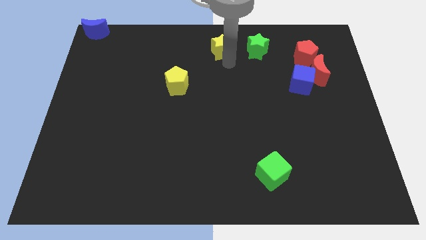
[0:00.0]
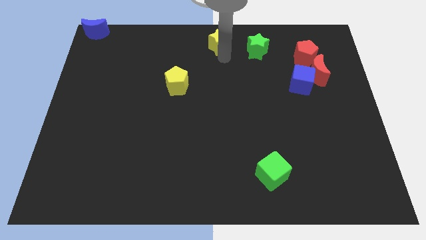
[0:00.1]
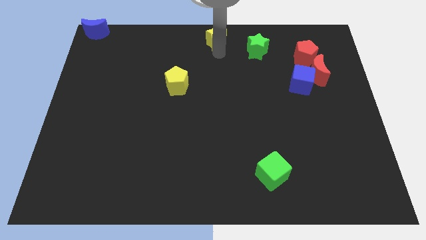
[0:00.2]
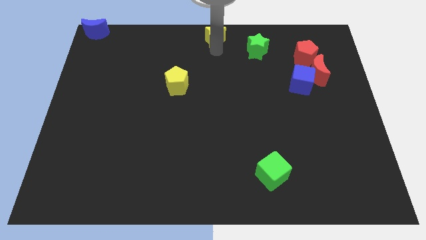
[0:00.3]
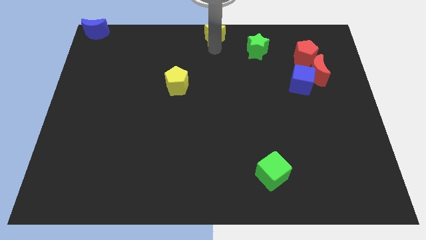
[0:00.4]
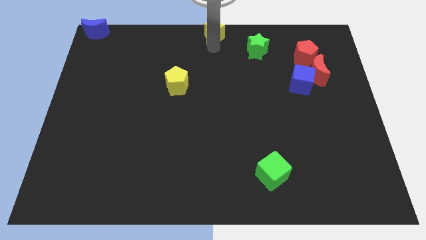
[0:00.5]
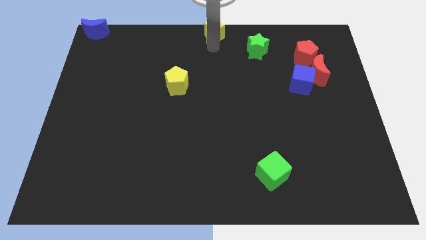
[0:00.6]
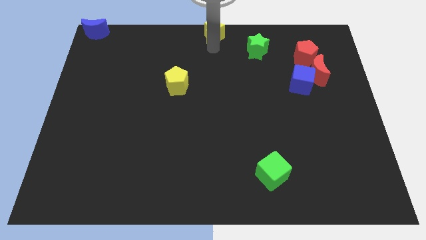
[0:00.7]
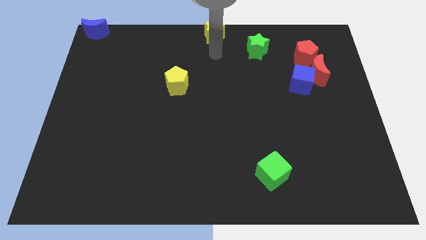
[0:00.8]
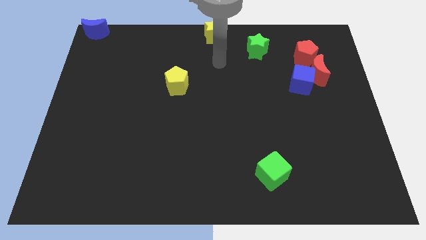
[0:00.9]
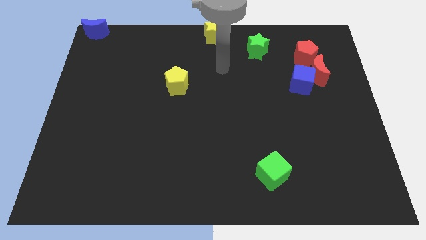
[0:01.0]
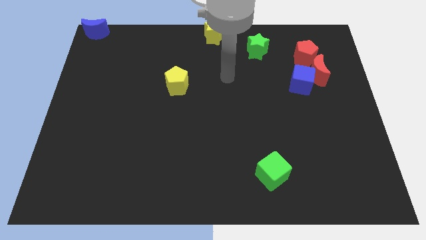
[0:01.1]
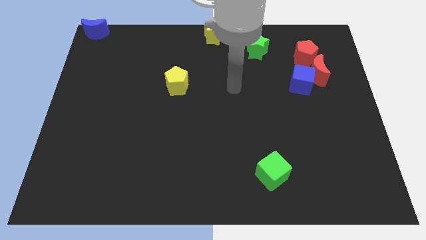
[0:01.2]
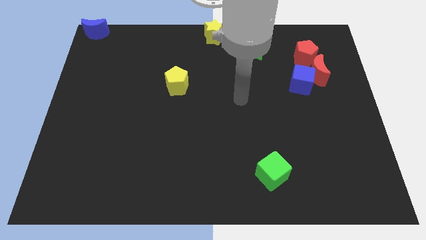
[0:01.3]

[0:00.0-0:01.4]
move the yellow star to the top center of the board

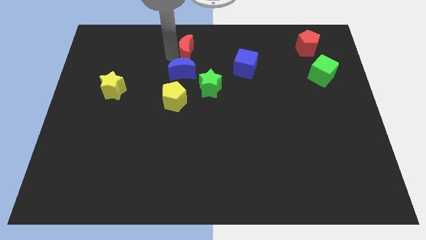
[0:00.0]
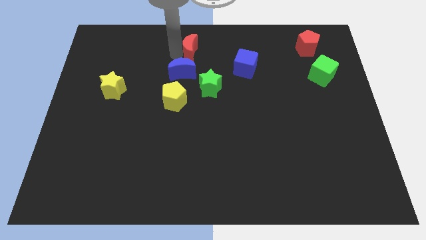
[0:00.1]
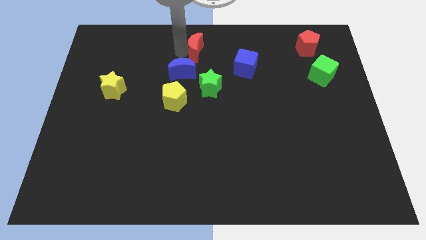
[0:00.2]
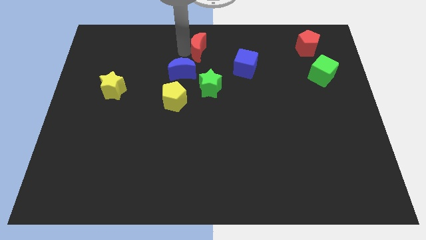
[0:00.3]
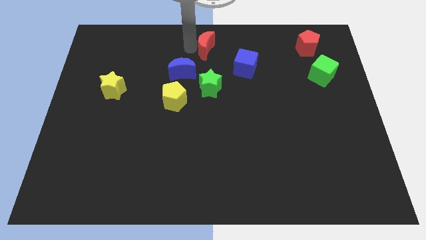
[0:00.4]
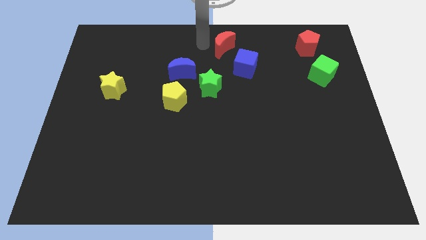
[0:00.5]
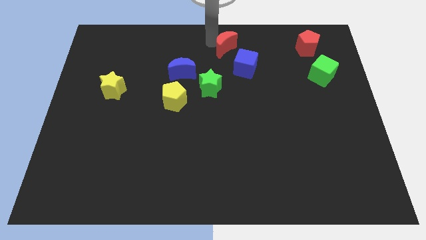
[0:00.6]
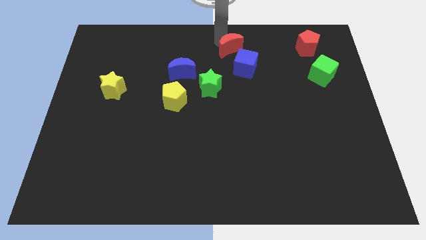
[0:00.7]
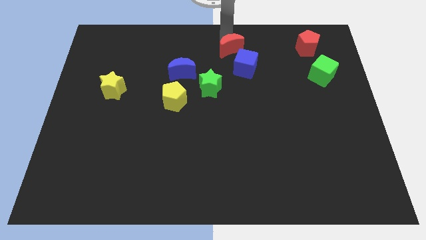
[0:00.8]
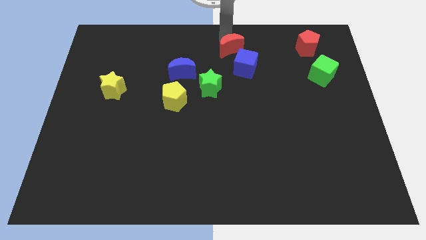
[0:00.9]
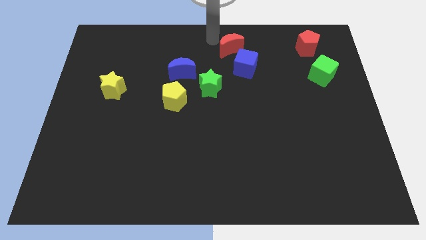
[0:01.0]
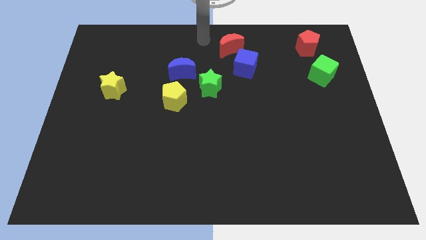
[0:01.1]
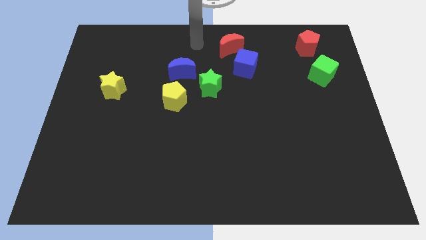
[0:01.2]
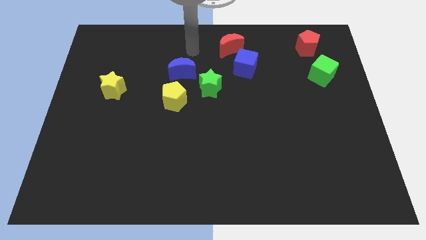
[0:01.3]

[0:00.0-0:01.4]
move red moon towards blue cube

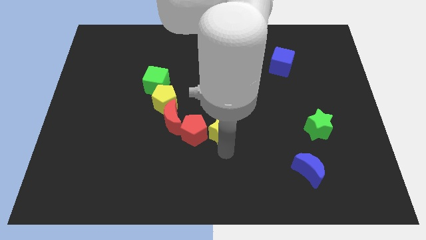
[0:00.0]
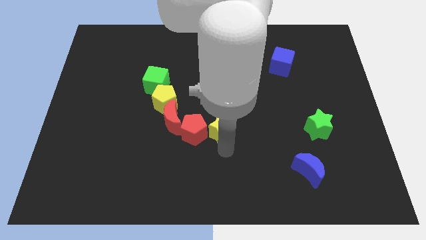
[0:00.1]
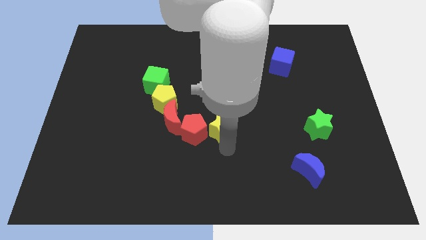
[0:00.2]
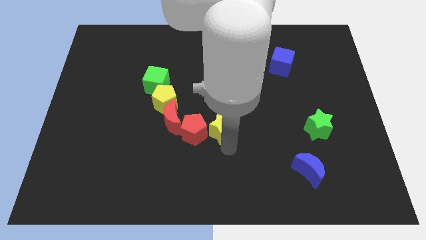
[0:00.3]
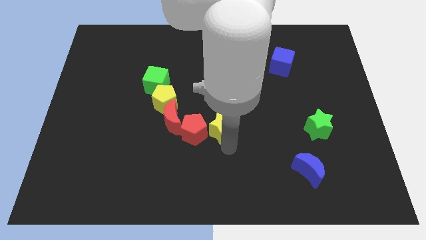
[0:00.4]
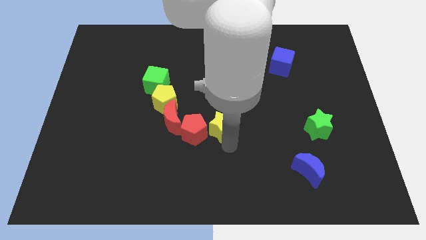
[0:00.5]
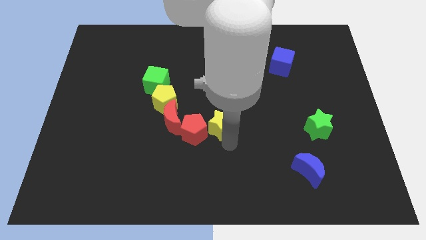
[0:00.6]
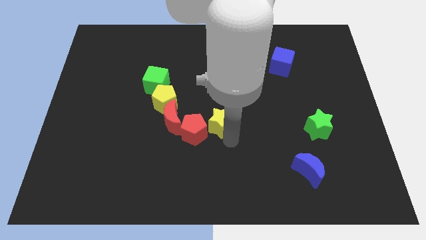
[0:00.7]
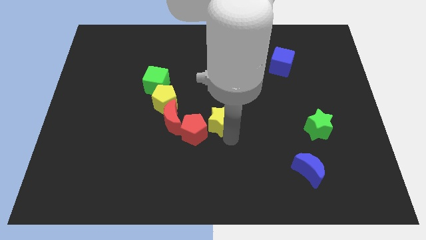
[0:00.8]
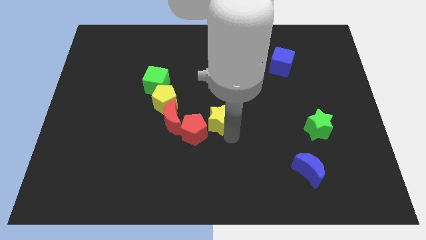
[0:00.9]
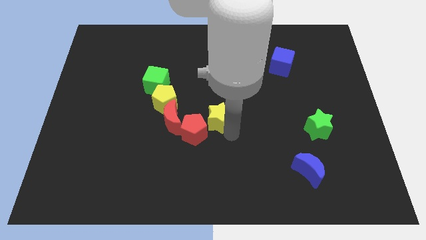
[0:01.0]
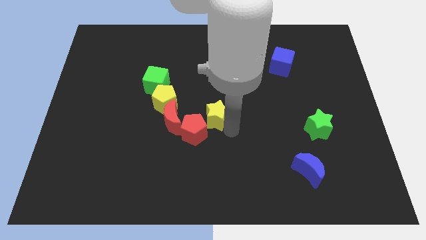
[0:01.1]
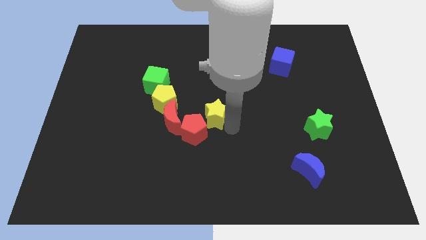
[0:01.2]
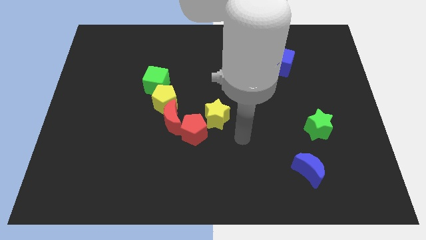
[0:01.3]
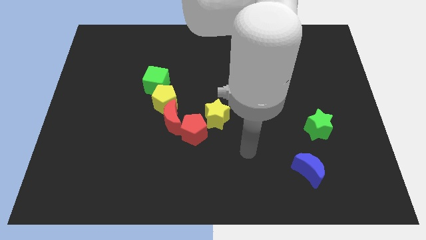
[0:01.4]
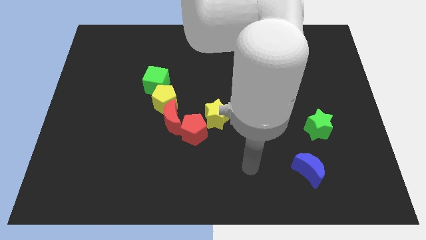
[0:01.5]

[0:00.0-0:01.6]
push the yellow star to the center

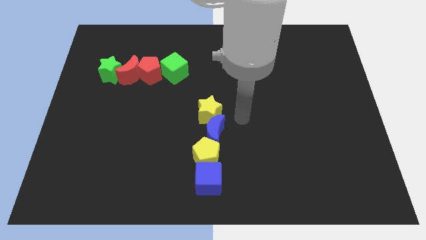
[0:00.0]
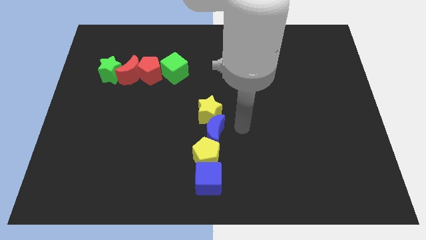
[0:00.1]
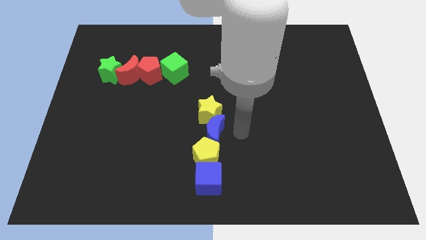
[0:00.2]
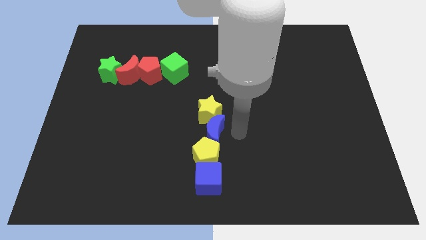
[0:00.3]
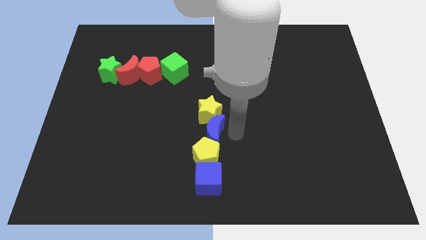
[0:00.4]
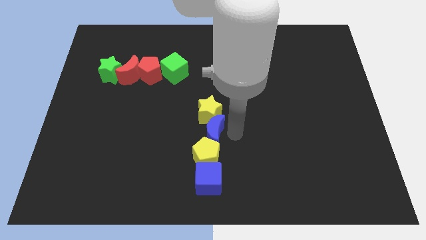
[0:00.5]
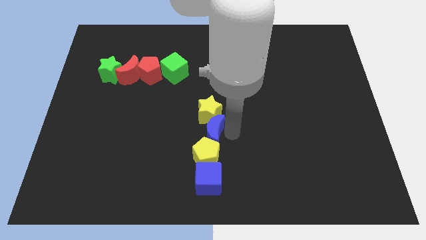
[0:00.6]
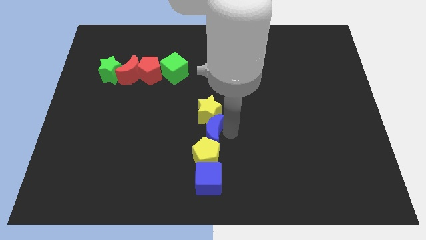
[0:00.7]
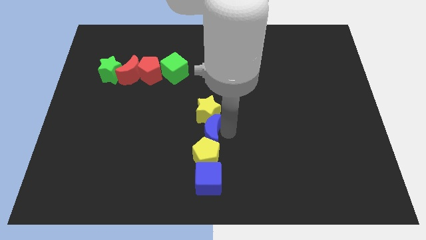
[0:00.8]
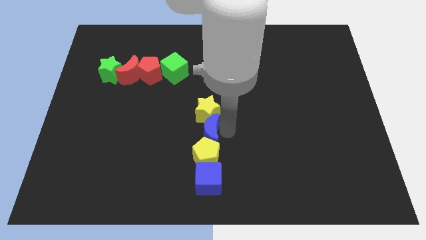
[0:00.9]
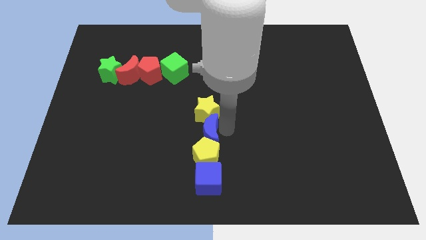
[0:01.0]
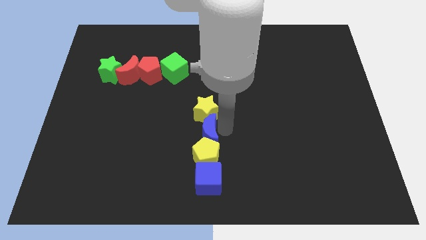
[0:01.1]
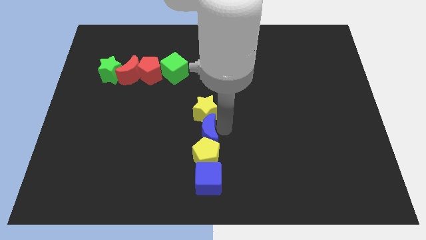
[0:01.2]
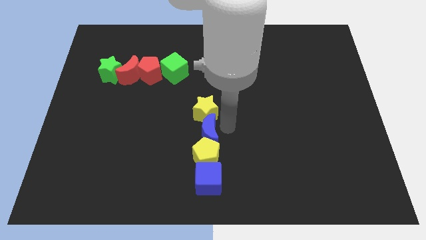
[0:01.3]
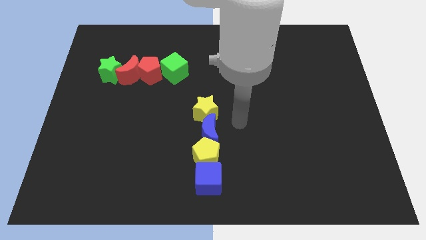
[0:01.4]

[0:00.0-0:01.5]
slightly move the blue cube to the left

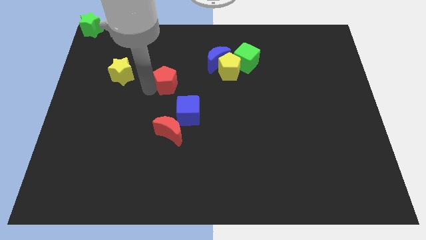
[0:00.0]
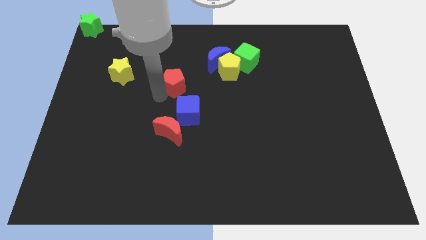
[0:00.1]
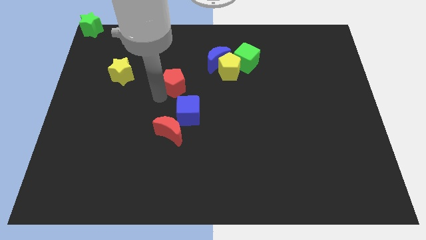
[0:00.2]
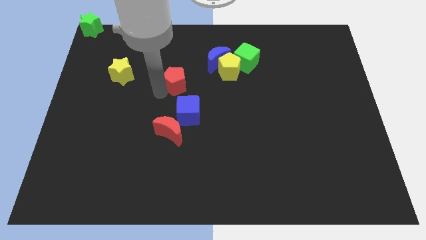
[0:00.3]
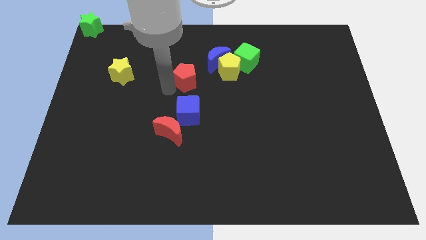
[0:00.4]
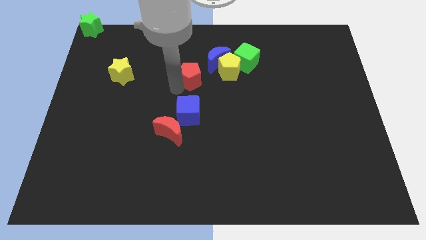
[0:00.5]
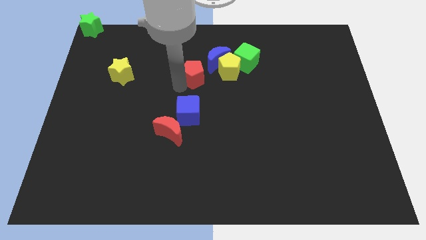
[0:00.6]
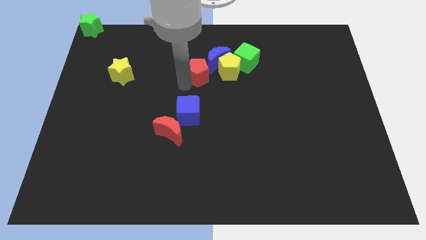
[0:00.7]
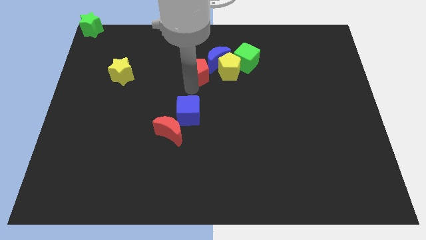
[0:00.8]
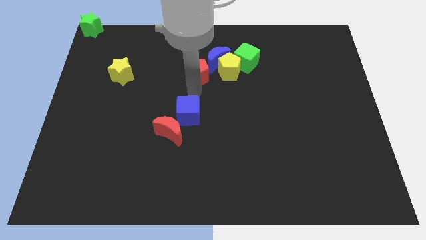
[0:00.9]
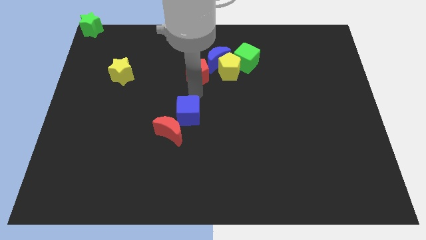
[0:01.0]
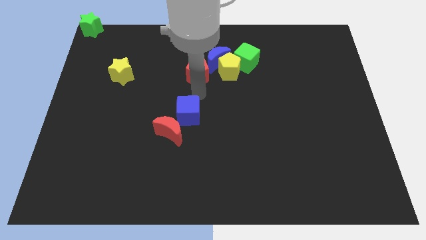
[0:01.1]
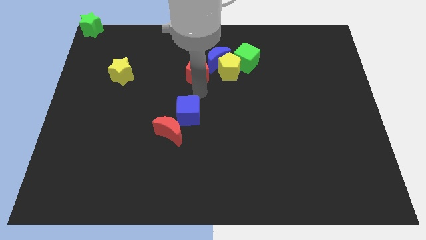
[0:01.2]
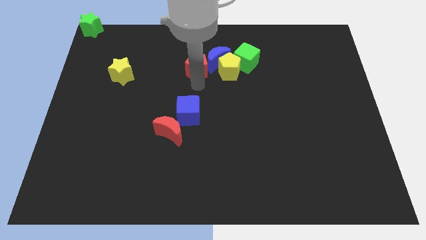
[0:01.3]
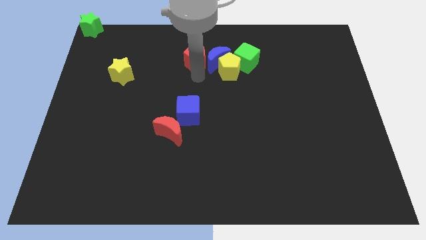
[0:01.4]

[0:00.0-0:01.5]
move the red pentagon to the left of the blue crescent

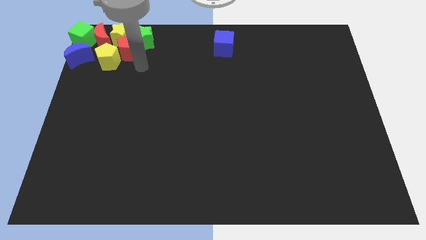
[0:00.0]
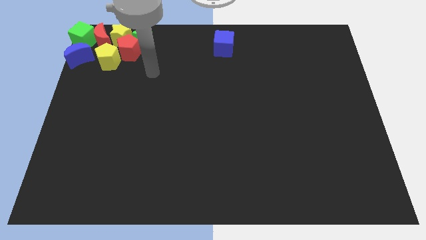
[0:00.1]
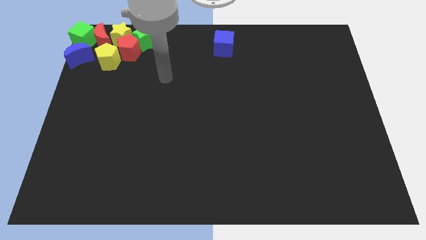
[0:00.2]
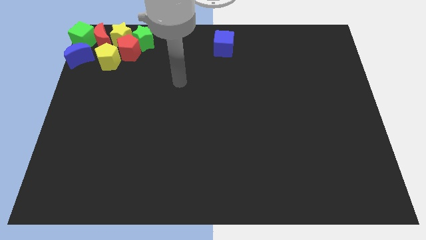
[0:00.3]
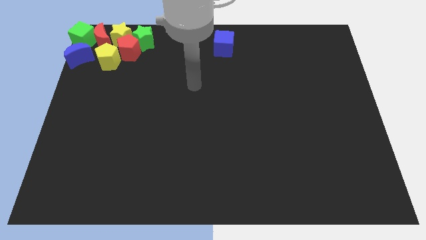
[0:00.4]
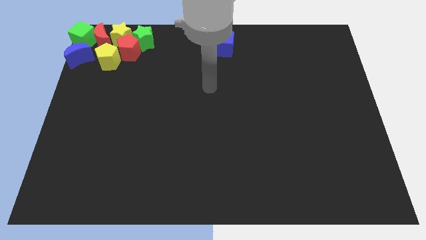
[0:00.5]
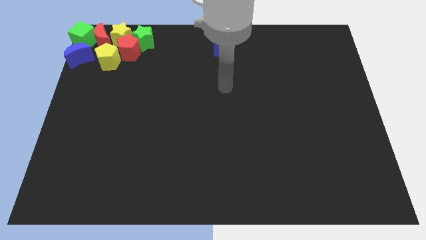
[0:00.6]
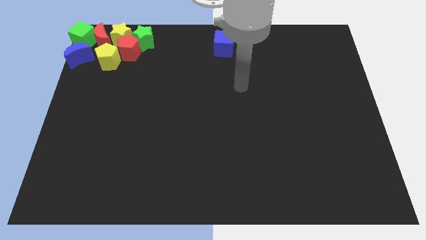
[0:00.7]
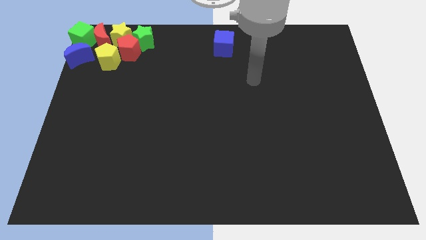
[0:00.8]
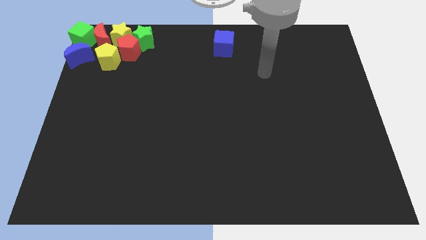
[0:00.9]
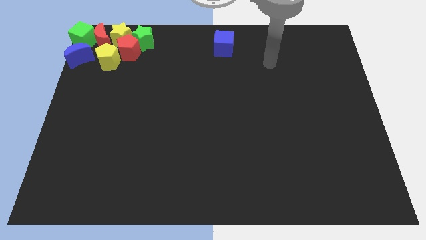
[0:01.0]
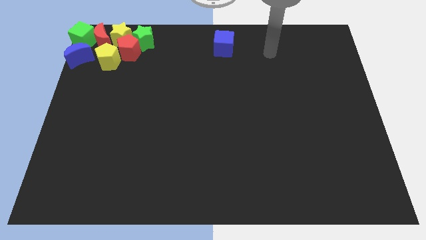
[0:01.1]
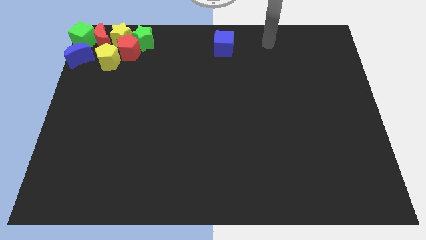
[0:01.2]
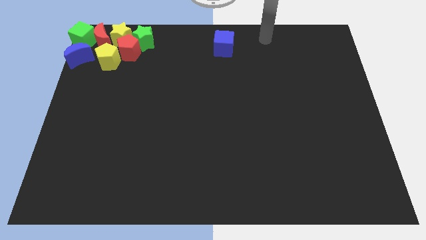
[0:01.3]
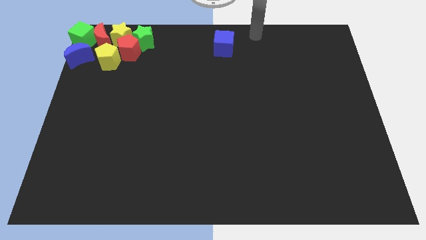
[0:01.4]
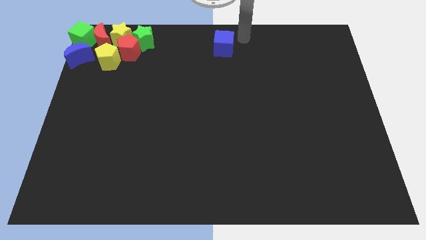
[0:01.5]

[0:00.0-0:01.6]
move your arm towards the blue cube
